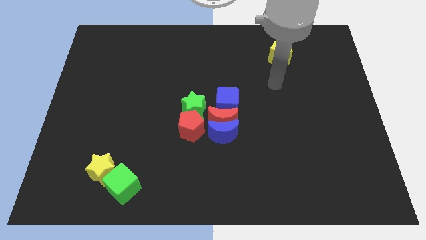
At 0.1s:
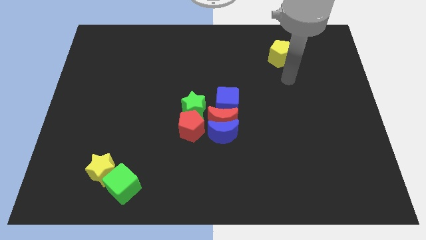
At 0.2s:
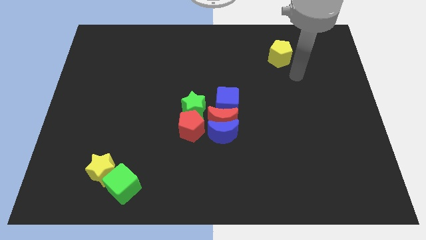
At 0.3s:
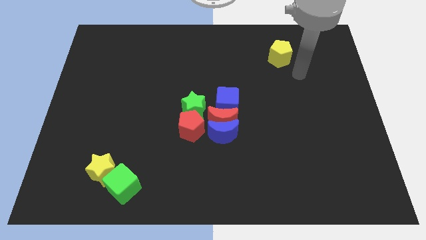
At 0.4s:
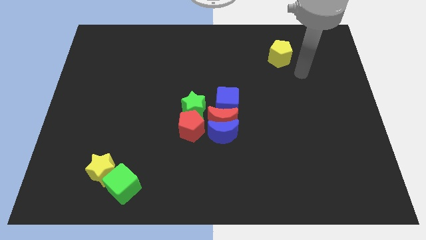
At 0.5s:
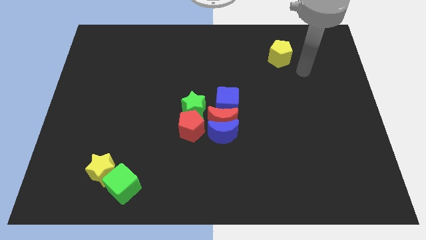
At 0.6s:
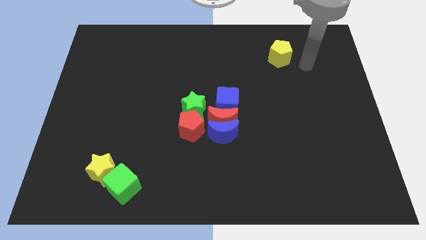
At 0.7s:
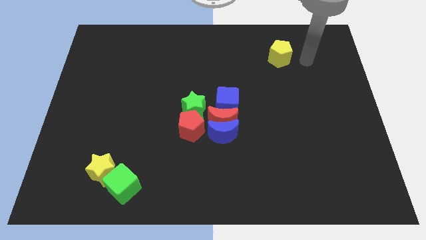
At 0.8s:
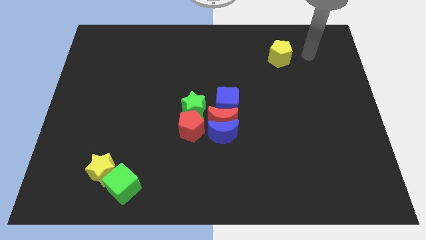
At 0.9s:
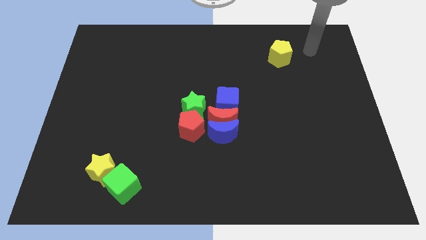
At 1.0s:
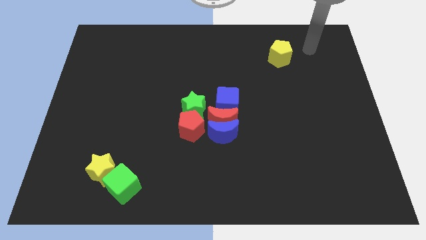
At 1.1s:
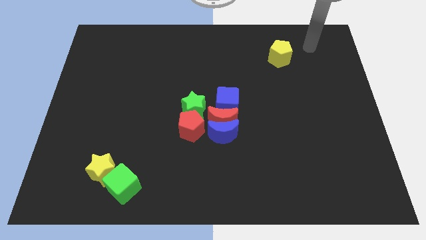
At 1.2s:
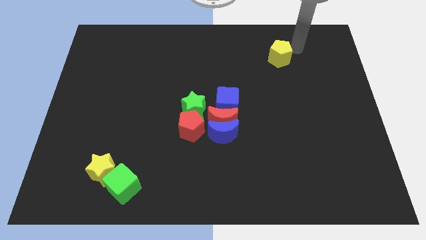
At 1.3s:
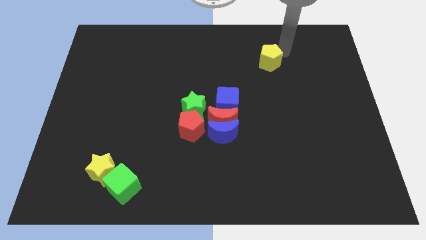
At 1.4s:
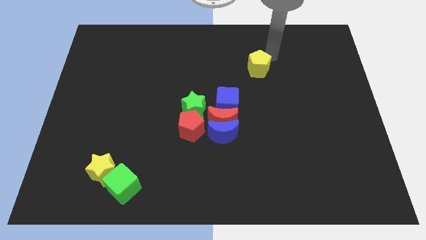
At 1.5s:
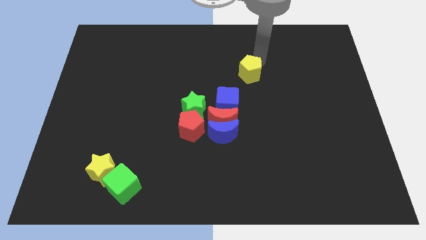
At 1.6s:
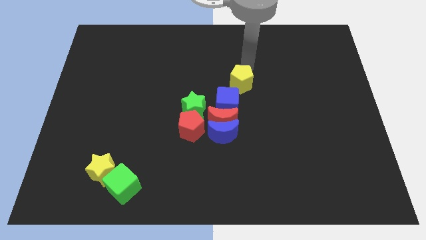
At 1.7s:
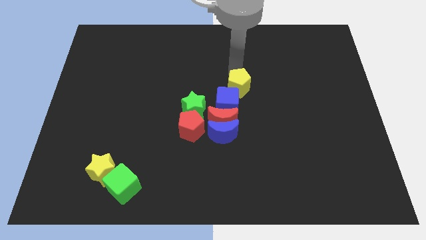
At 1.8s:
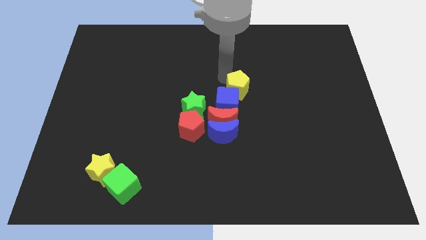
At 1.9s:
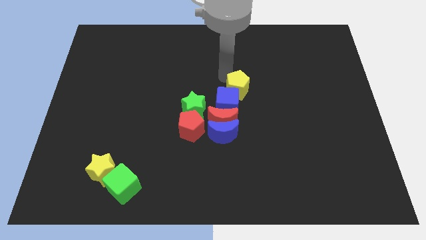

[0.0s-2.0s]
push the yellow pentagon towards the blue cube

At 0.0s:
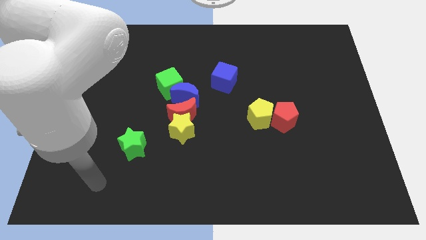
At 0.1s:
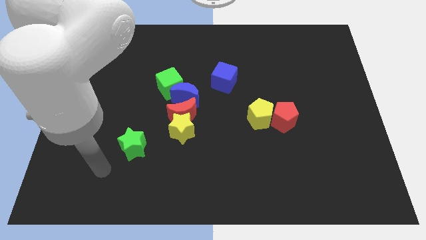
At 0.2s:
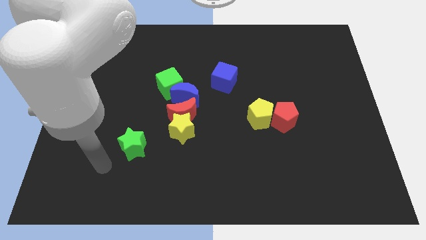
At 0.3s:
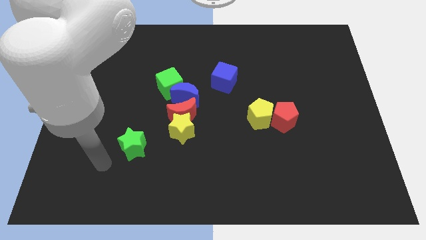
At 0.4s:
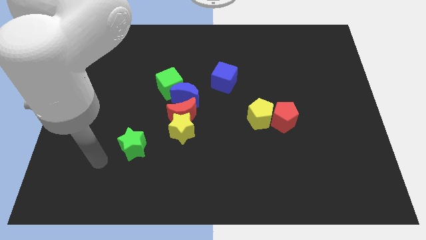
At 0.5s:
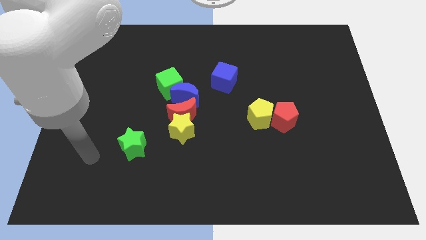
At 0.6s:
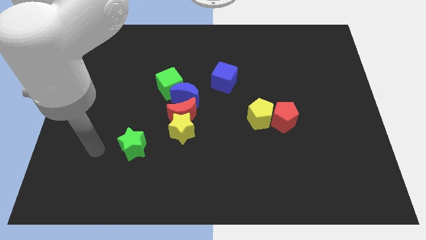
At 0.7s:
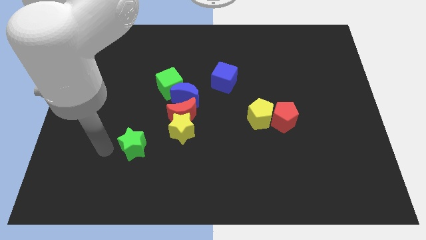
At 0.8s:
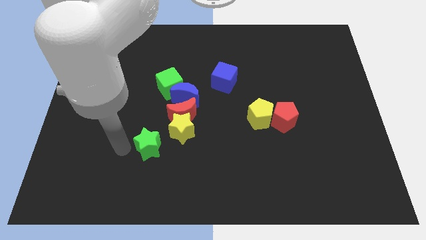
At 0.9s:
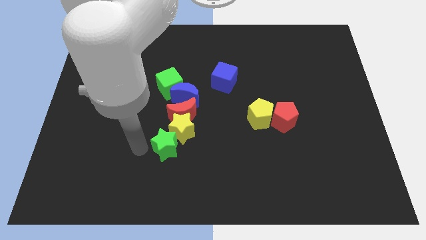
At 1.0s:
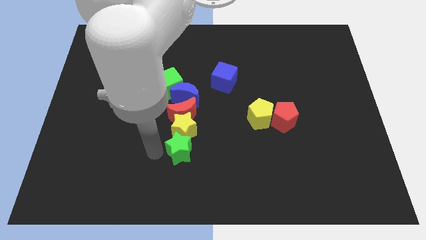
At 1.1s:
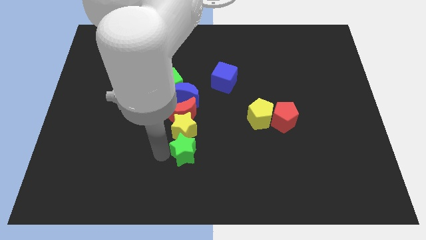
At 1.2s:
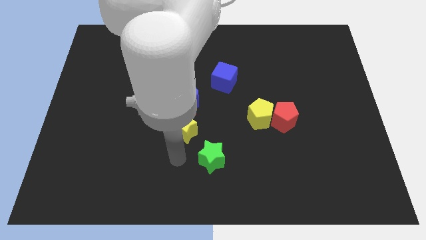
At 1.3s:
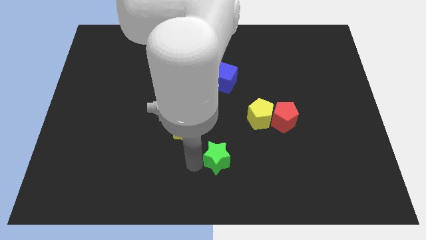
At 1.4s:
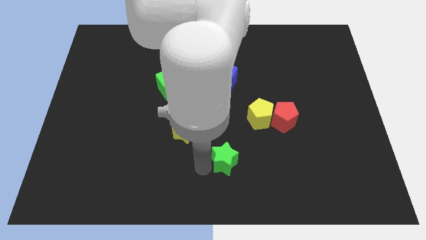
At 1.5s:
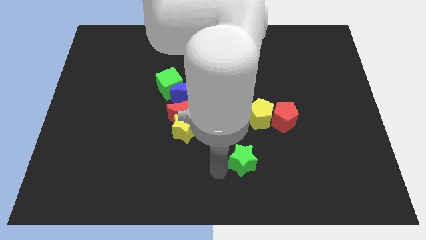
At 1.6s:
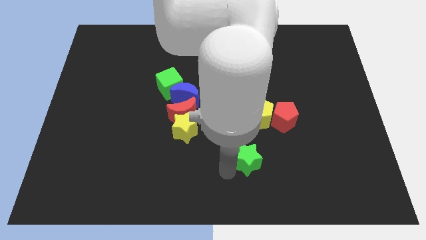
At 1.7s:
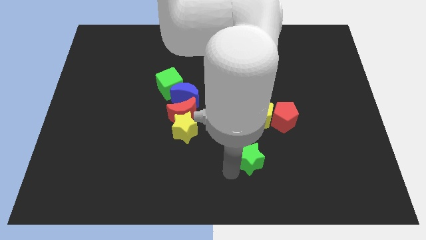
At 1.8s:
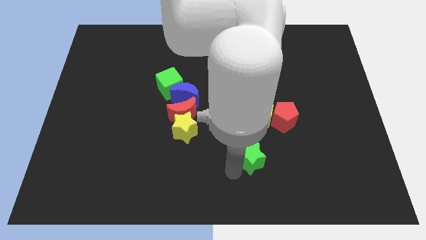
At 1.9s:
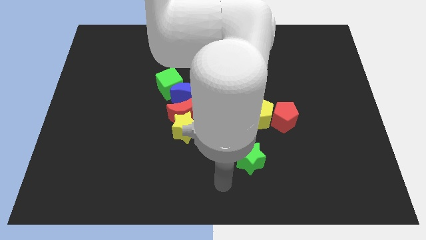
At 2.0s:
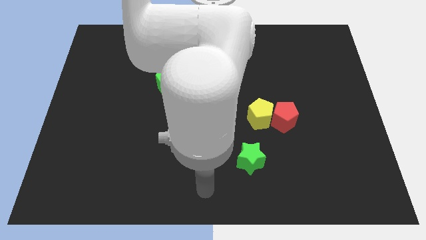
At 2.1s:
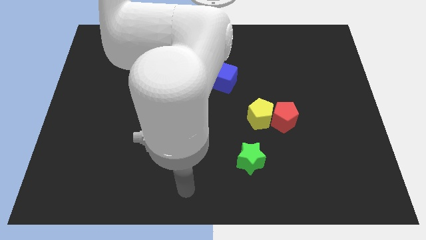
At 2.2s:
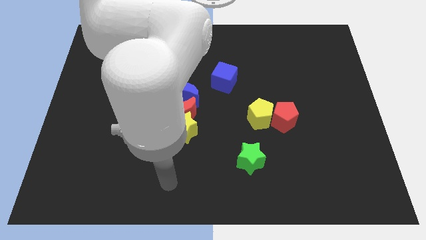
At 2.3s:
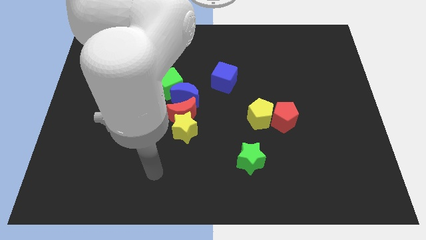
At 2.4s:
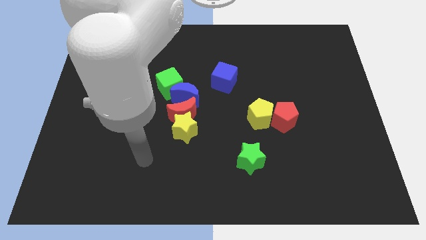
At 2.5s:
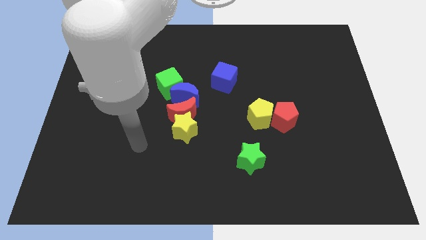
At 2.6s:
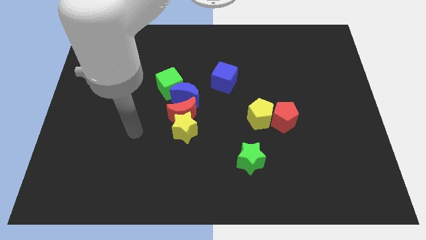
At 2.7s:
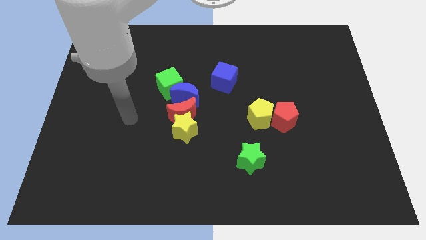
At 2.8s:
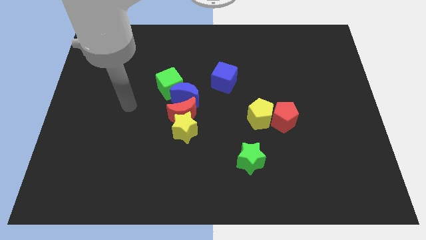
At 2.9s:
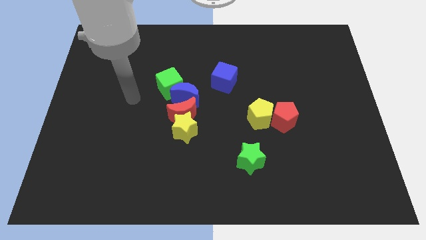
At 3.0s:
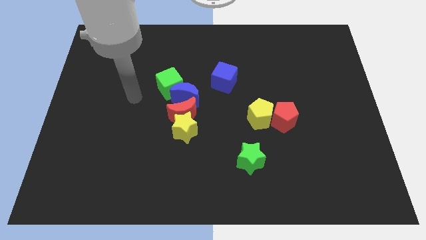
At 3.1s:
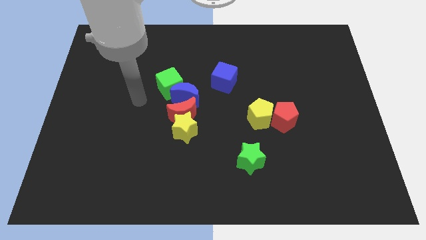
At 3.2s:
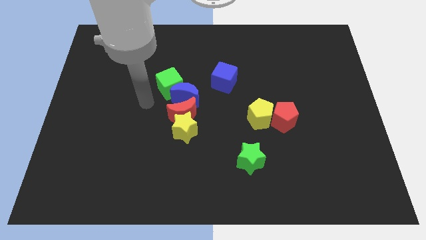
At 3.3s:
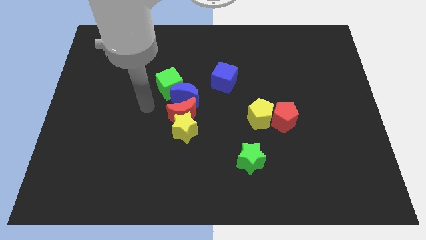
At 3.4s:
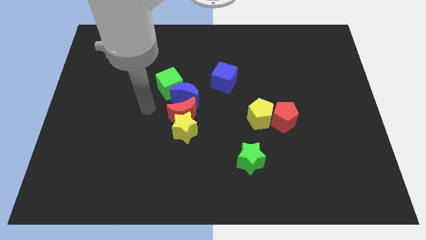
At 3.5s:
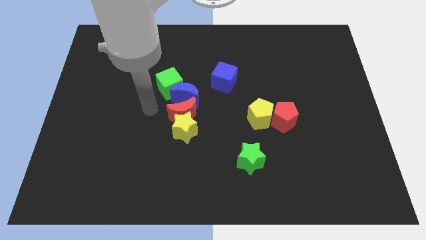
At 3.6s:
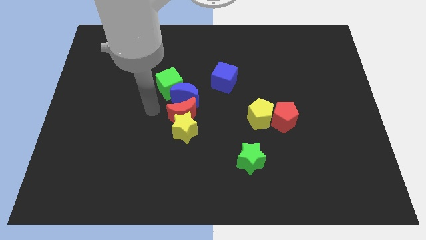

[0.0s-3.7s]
drag green star towards right side of the board

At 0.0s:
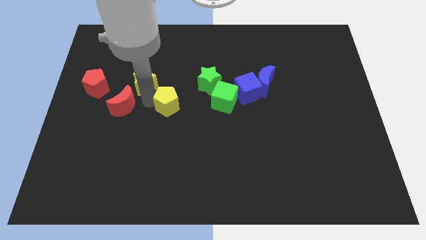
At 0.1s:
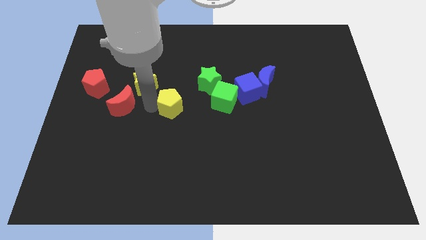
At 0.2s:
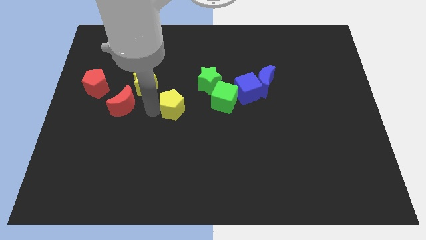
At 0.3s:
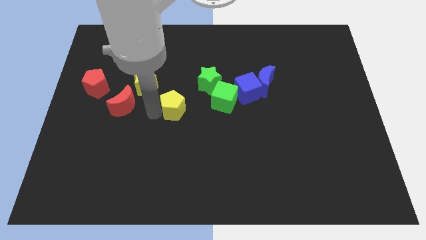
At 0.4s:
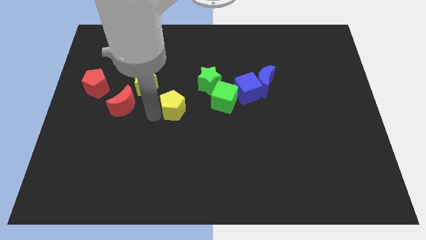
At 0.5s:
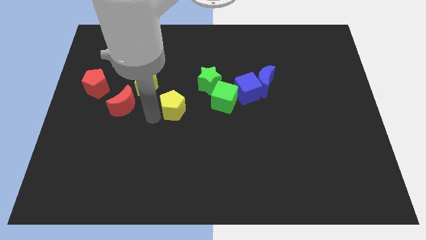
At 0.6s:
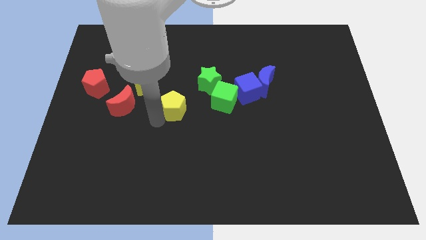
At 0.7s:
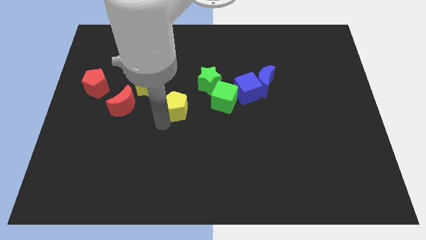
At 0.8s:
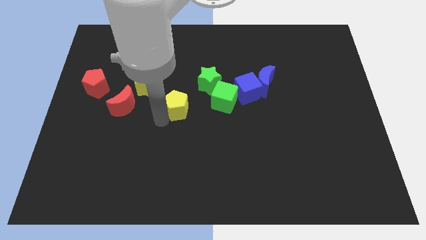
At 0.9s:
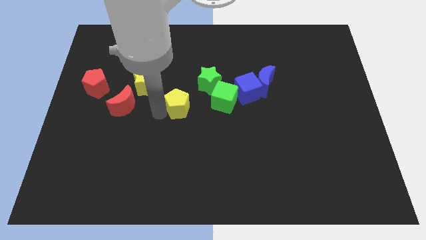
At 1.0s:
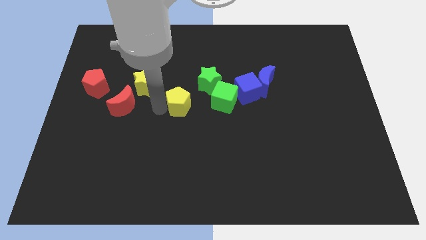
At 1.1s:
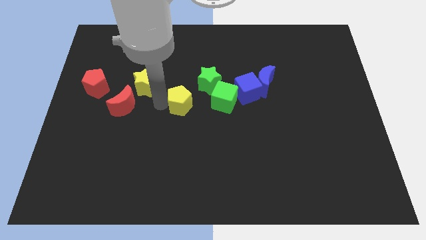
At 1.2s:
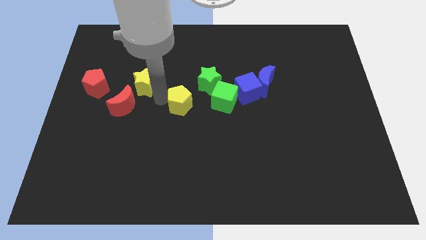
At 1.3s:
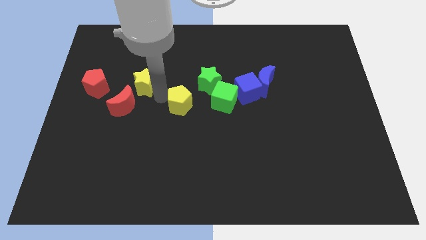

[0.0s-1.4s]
push the yellow pentagon to the right

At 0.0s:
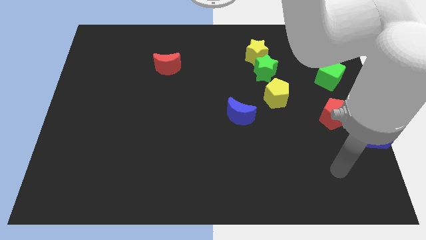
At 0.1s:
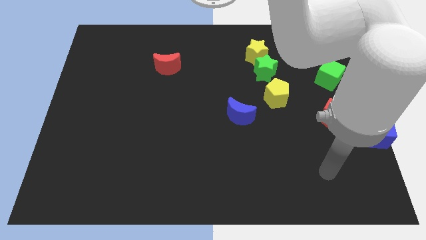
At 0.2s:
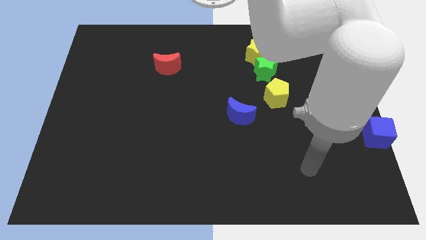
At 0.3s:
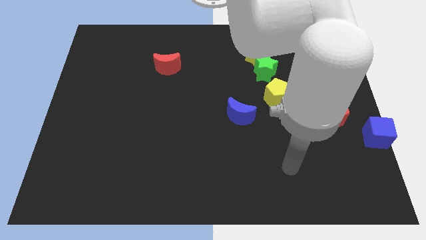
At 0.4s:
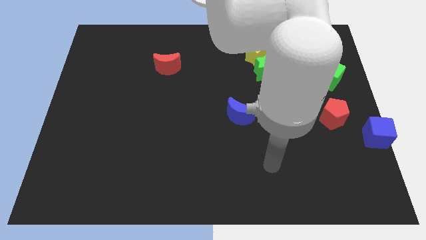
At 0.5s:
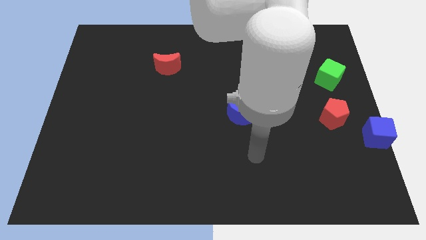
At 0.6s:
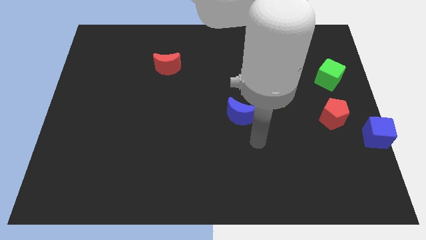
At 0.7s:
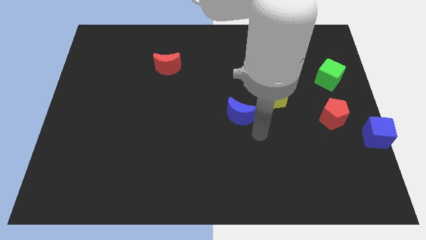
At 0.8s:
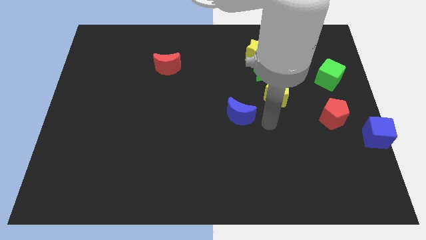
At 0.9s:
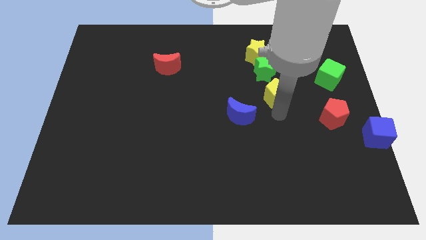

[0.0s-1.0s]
point your arm at the bottom of the yellow pentagon

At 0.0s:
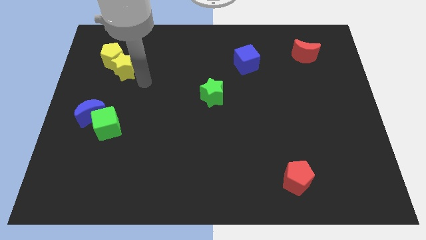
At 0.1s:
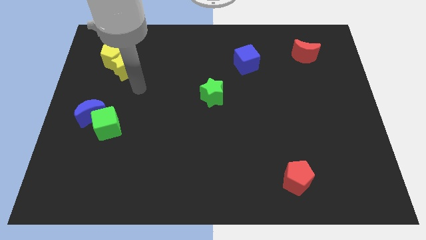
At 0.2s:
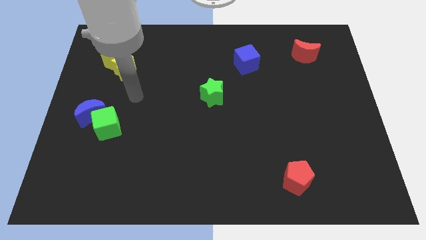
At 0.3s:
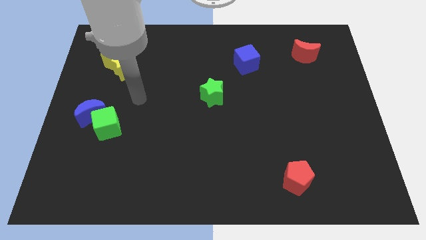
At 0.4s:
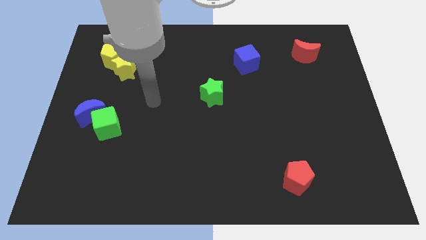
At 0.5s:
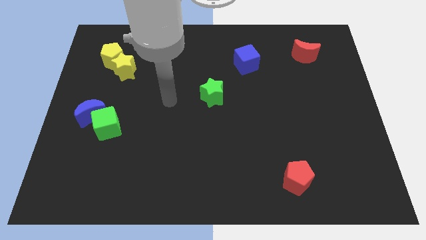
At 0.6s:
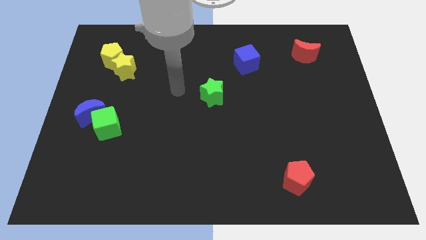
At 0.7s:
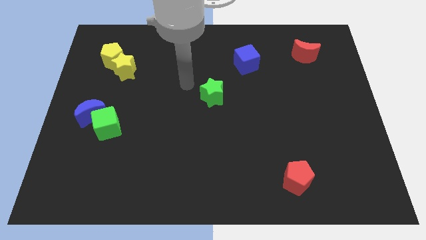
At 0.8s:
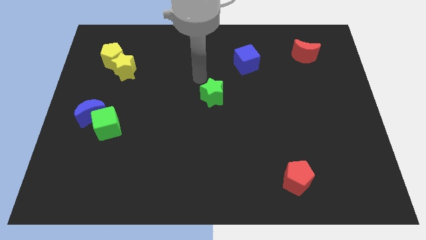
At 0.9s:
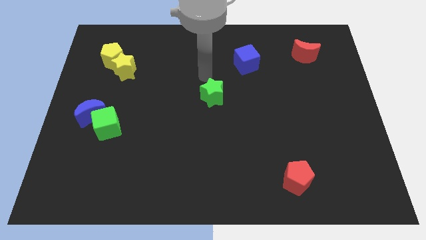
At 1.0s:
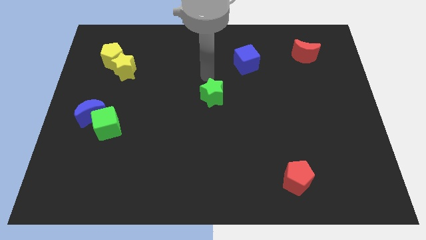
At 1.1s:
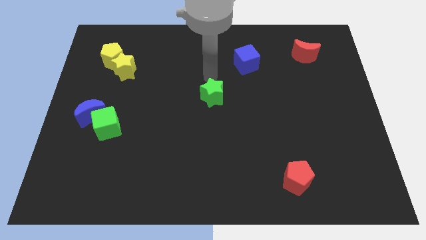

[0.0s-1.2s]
place your arm to the top of the green star
